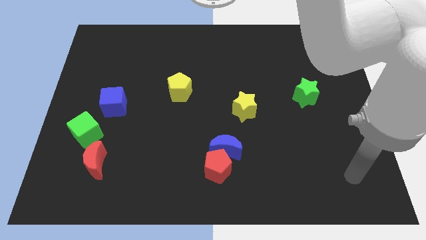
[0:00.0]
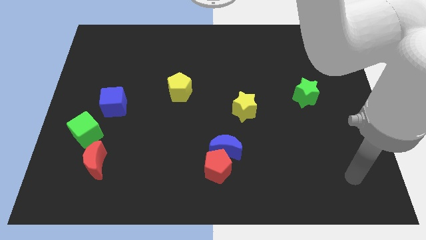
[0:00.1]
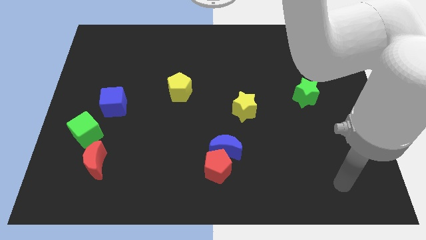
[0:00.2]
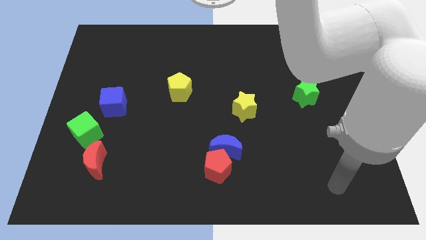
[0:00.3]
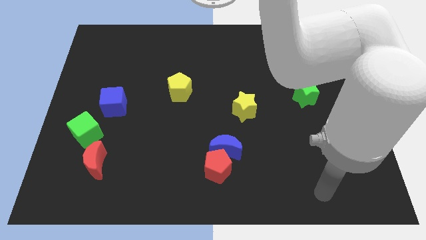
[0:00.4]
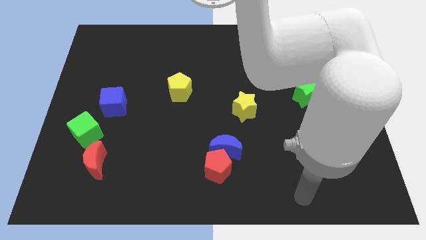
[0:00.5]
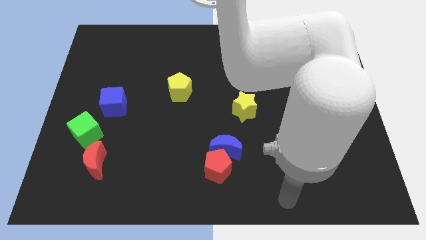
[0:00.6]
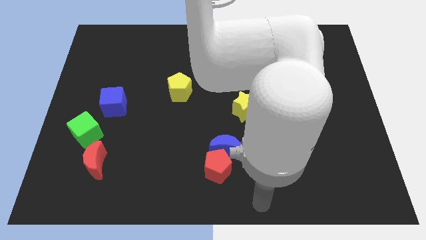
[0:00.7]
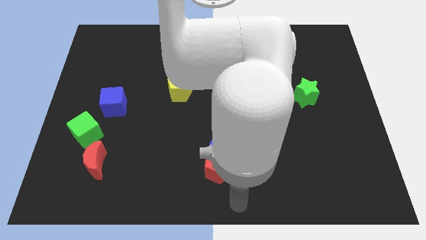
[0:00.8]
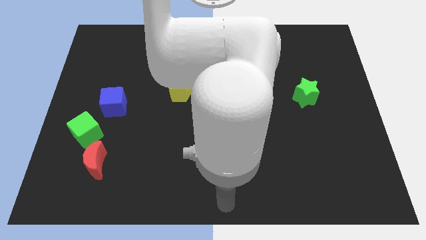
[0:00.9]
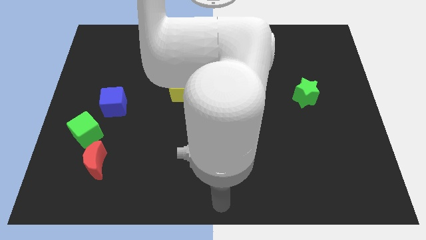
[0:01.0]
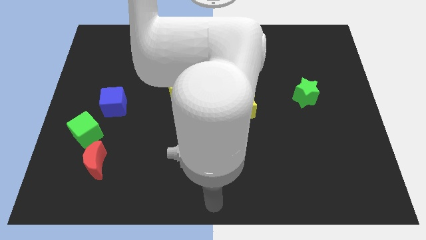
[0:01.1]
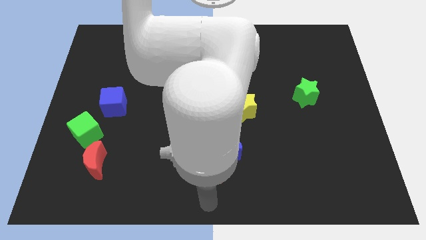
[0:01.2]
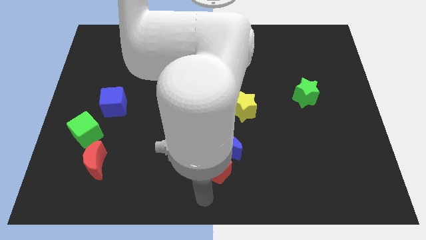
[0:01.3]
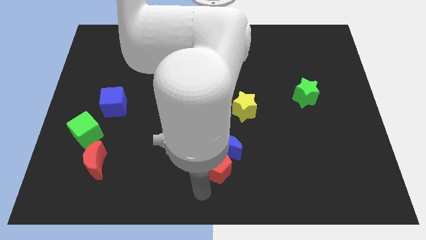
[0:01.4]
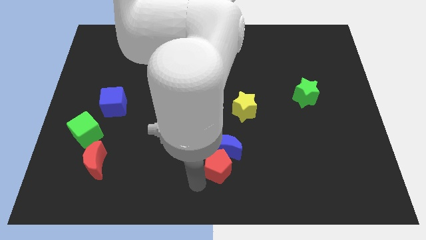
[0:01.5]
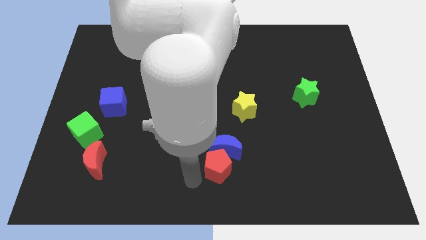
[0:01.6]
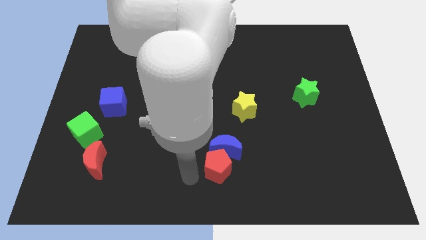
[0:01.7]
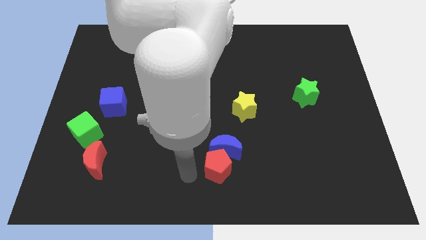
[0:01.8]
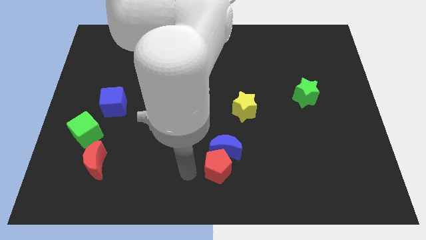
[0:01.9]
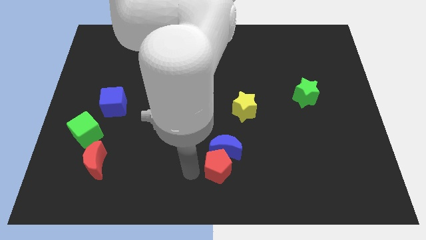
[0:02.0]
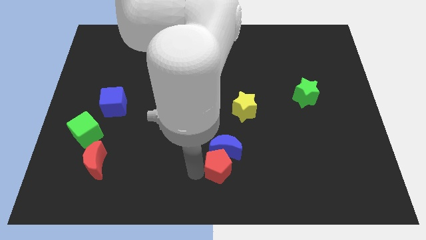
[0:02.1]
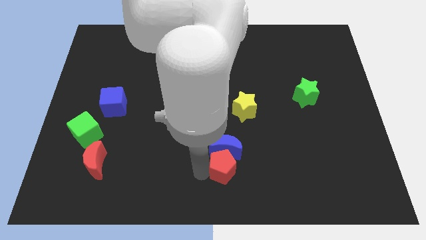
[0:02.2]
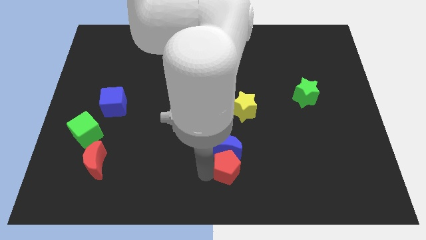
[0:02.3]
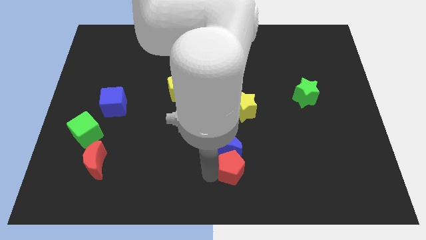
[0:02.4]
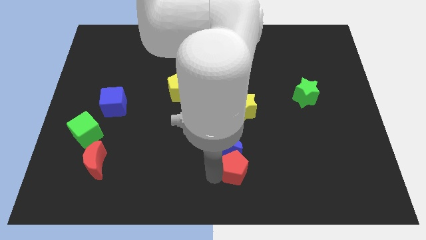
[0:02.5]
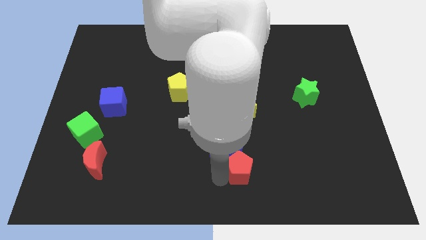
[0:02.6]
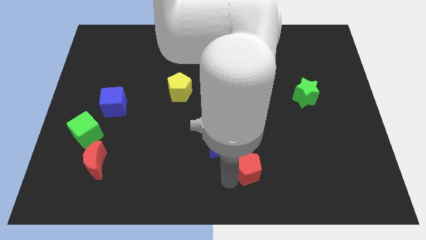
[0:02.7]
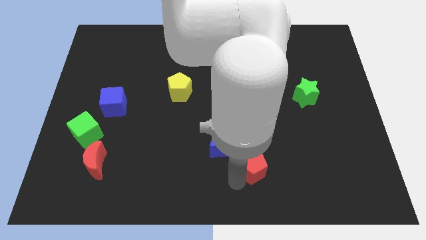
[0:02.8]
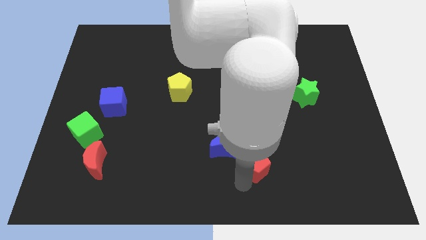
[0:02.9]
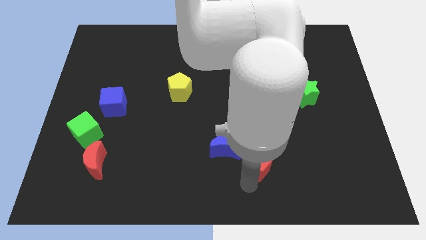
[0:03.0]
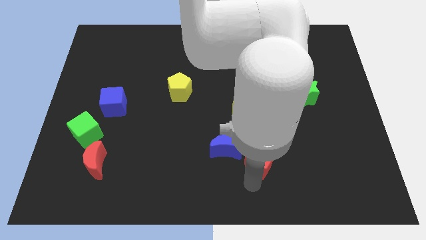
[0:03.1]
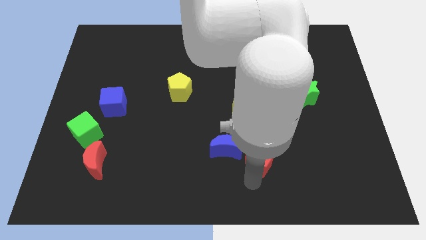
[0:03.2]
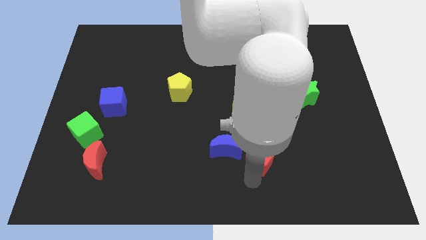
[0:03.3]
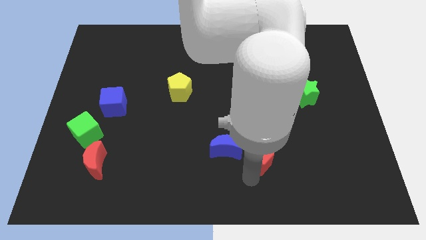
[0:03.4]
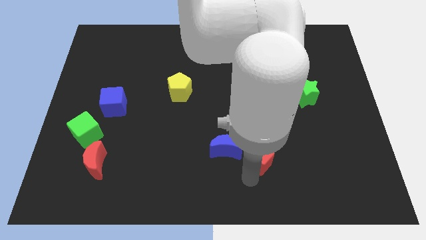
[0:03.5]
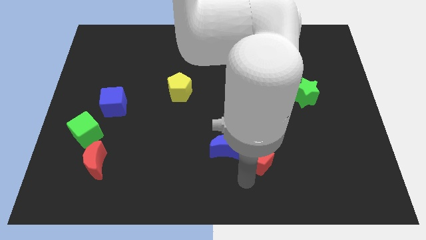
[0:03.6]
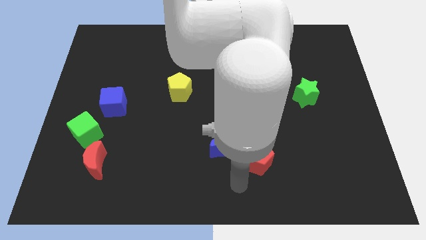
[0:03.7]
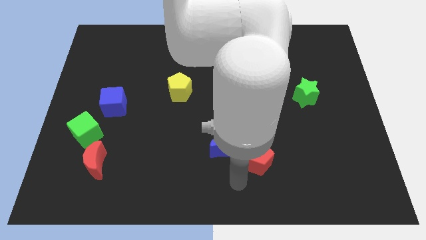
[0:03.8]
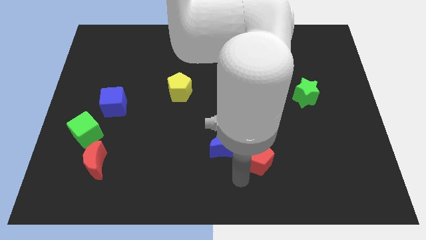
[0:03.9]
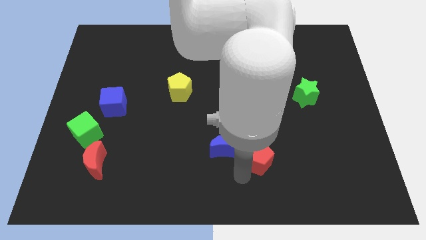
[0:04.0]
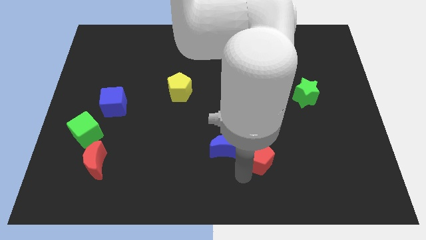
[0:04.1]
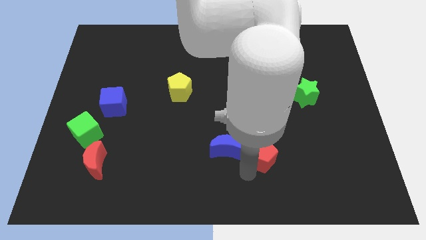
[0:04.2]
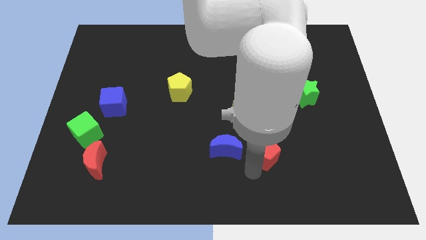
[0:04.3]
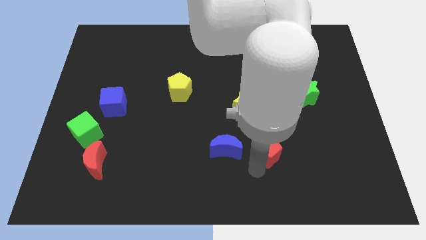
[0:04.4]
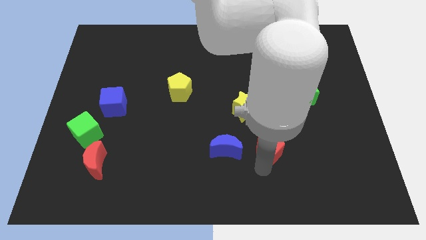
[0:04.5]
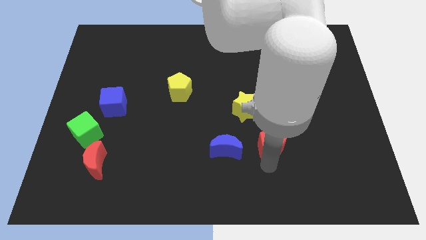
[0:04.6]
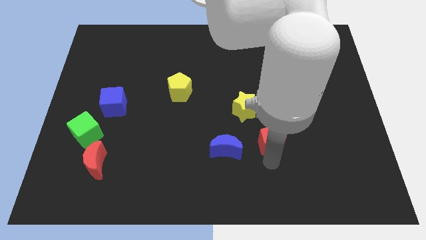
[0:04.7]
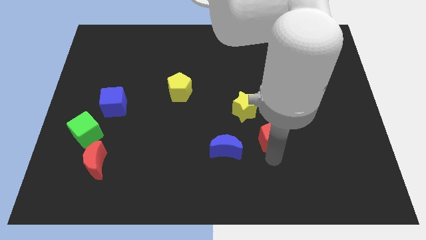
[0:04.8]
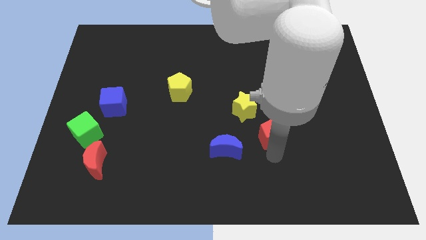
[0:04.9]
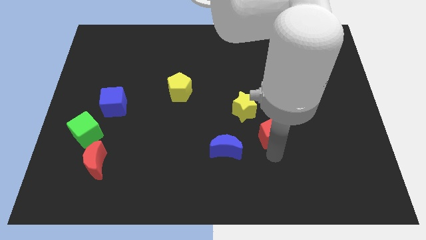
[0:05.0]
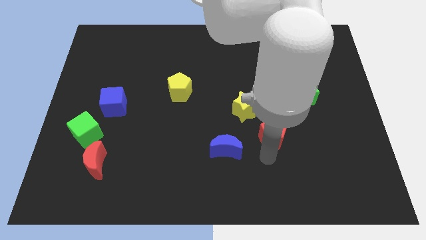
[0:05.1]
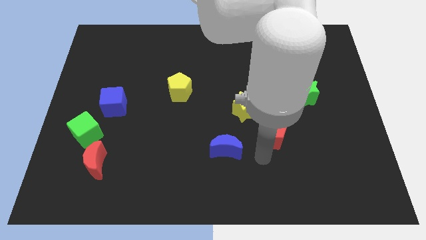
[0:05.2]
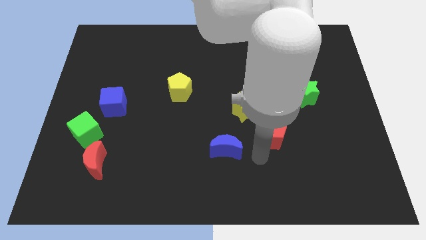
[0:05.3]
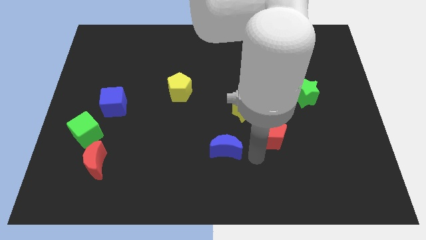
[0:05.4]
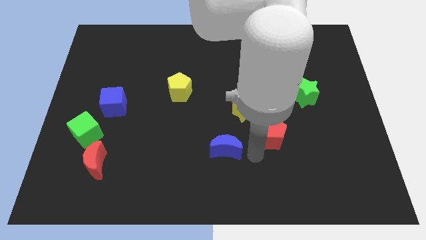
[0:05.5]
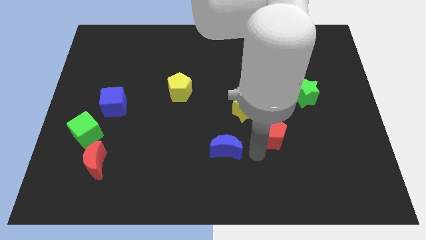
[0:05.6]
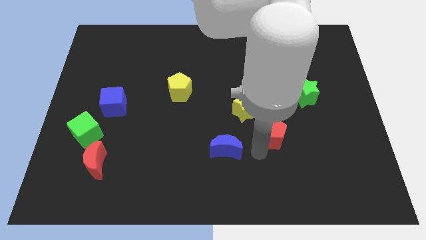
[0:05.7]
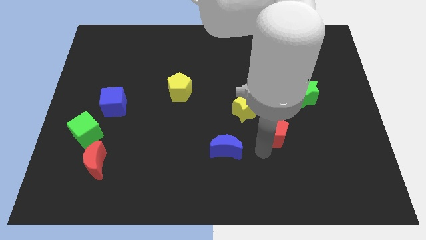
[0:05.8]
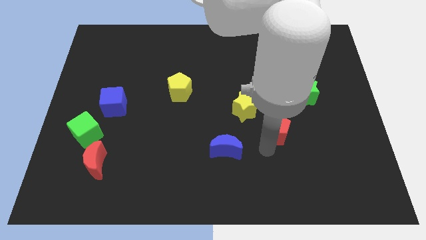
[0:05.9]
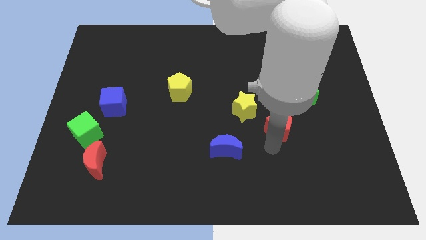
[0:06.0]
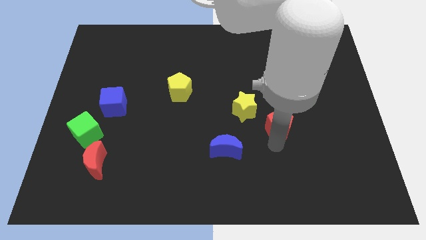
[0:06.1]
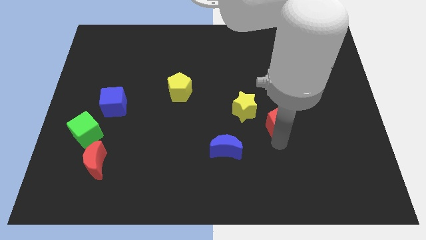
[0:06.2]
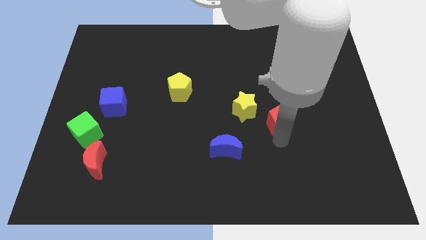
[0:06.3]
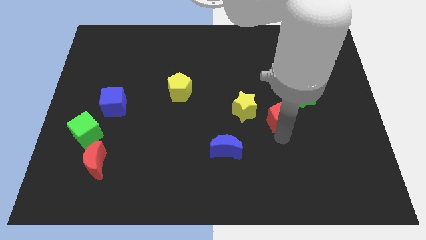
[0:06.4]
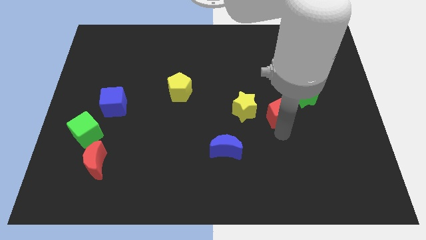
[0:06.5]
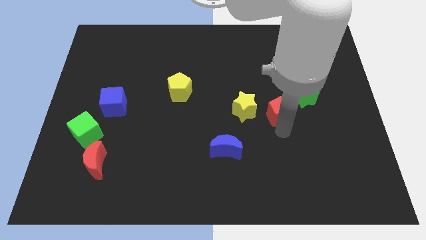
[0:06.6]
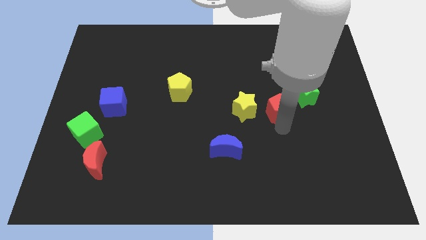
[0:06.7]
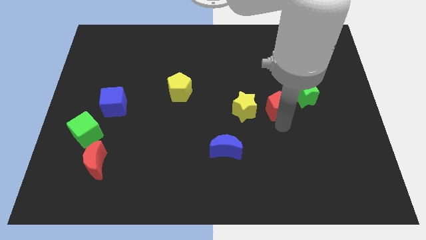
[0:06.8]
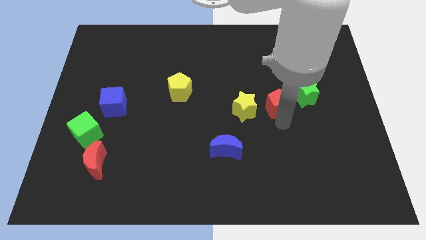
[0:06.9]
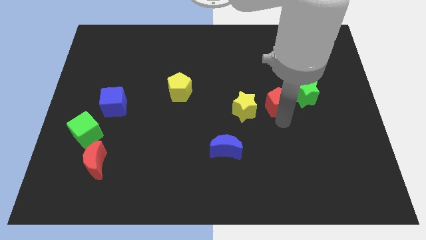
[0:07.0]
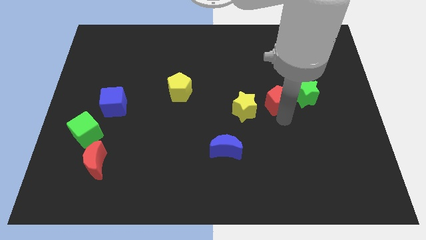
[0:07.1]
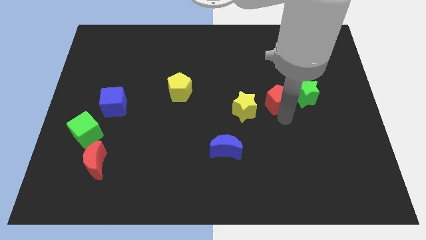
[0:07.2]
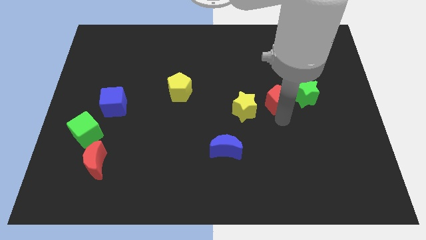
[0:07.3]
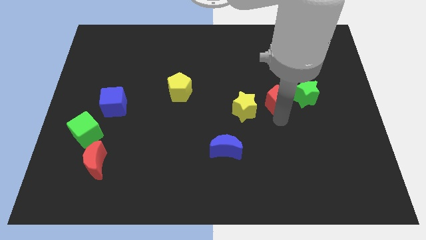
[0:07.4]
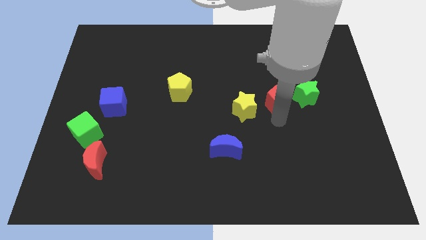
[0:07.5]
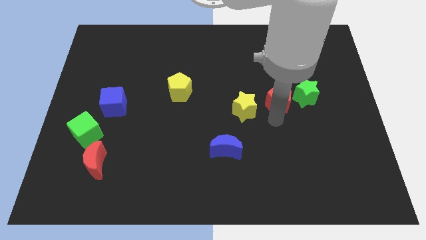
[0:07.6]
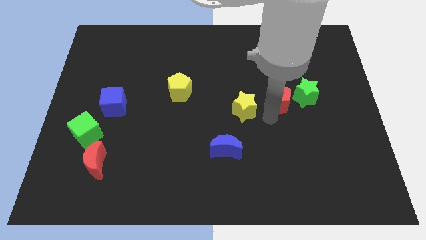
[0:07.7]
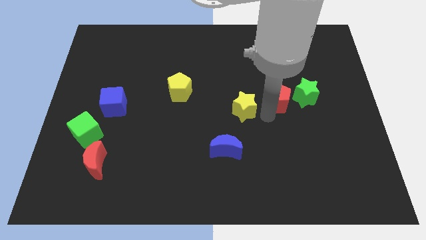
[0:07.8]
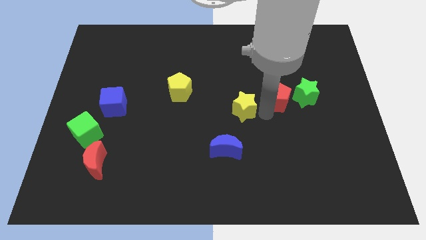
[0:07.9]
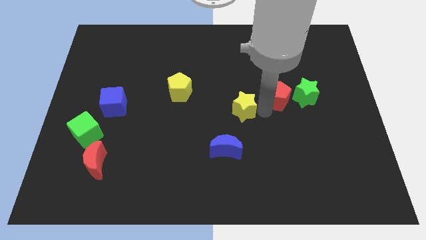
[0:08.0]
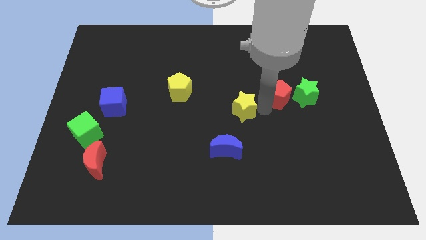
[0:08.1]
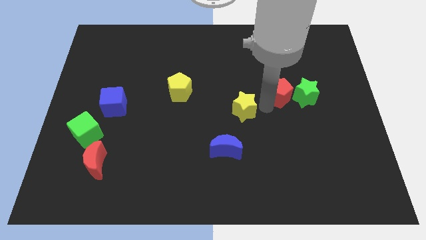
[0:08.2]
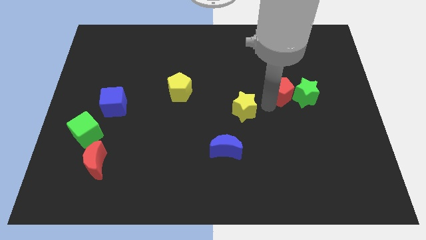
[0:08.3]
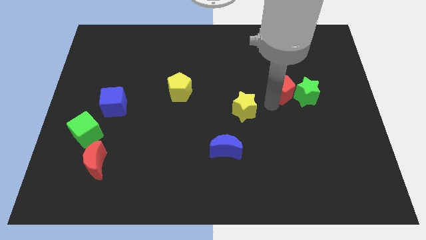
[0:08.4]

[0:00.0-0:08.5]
push the red pentagon to the green star
